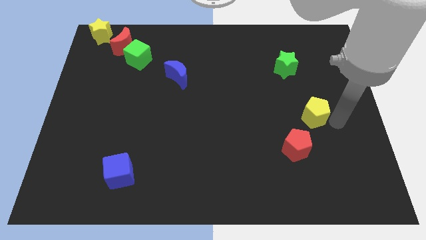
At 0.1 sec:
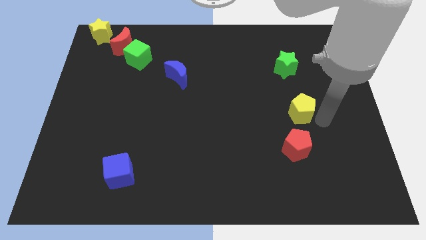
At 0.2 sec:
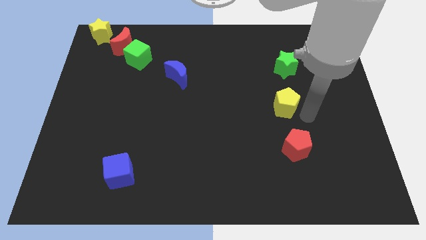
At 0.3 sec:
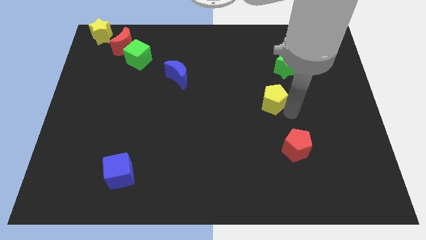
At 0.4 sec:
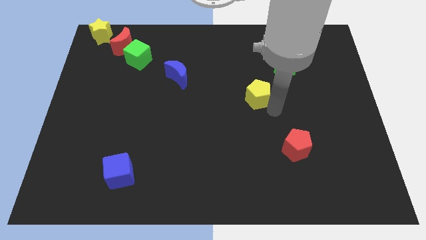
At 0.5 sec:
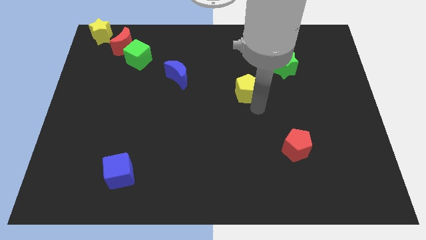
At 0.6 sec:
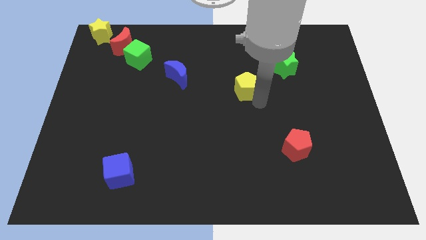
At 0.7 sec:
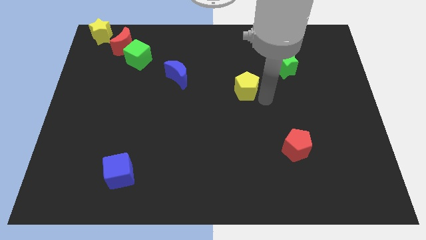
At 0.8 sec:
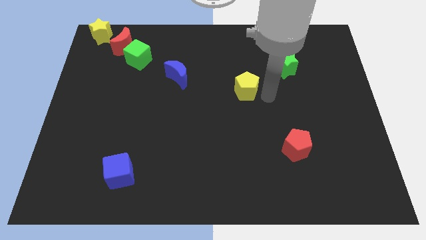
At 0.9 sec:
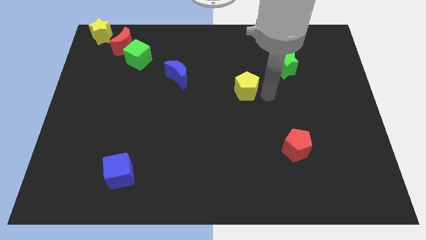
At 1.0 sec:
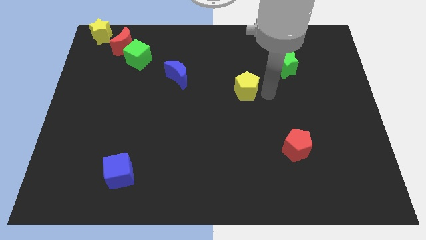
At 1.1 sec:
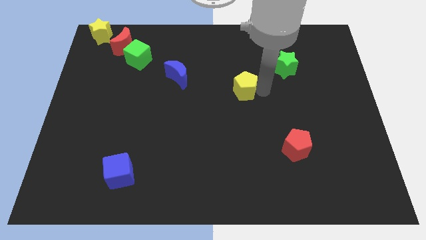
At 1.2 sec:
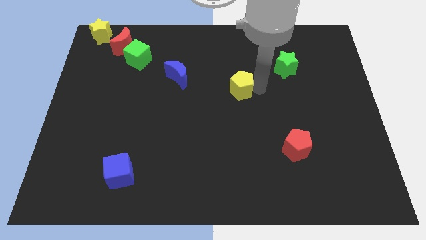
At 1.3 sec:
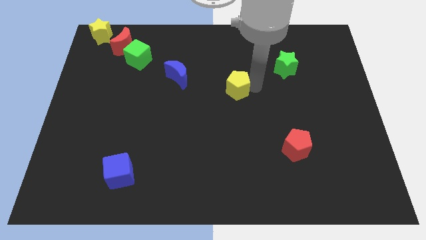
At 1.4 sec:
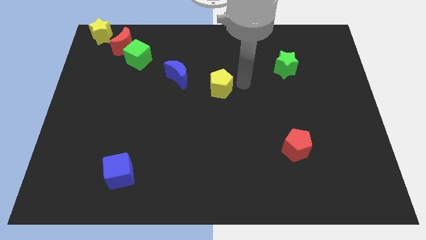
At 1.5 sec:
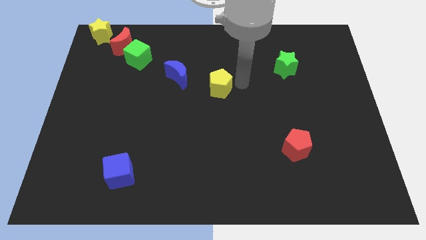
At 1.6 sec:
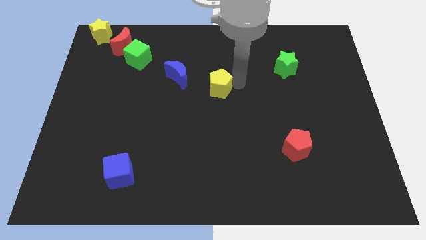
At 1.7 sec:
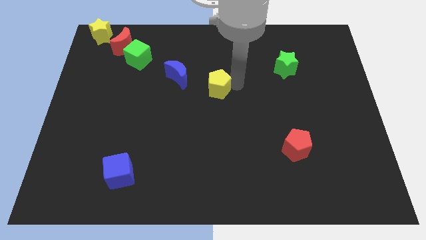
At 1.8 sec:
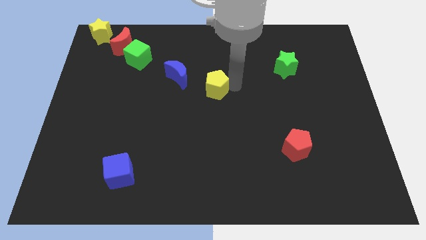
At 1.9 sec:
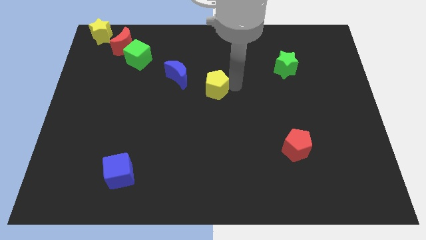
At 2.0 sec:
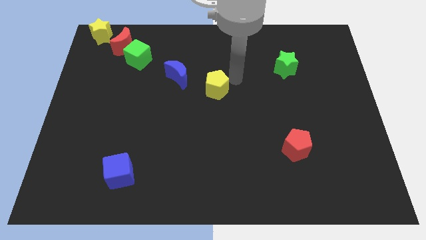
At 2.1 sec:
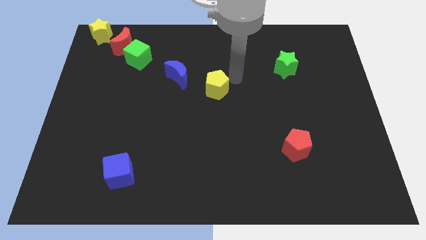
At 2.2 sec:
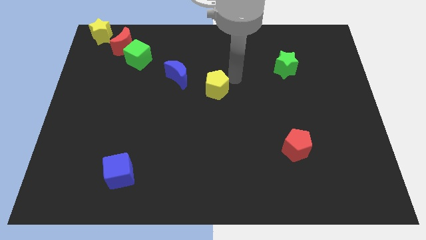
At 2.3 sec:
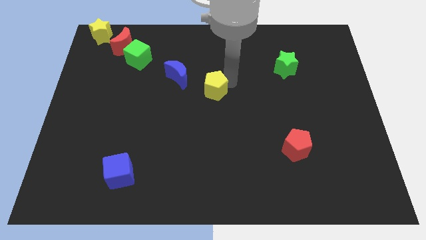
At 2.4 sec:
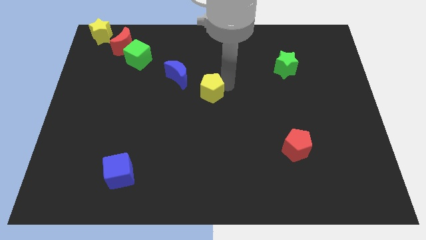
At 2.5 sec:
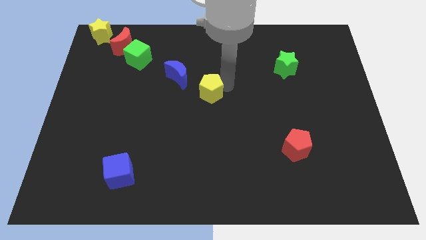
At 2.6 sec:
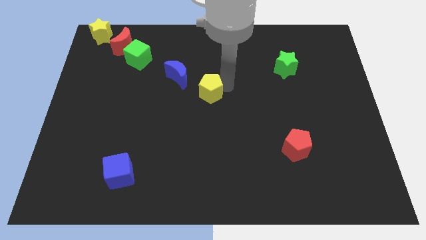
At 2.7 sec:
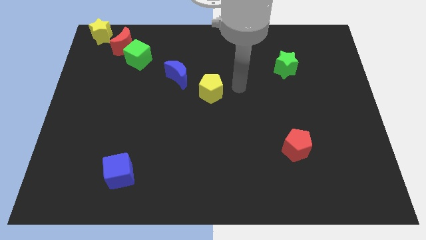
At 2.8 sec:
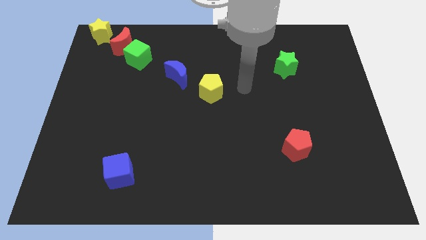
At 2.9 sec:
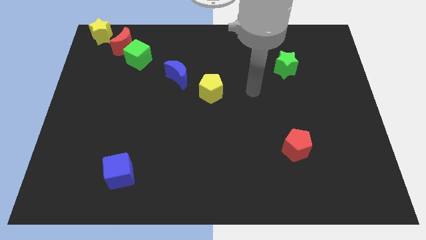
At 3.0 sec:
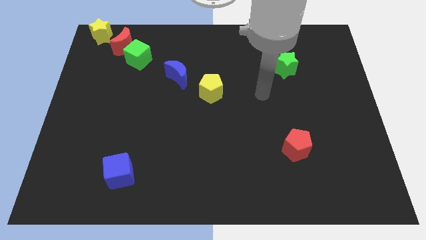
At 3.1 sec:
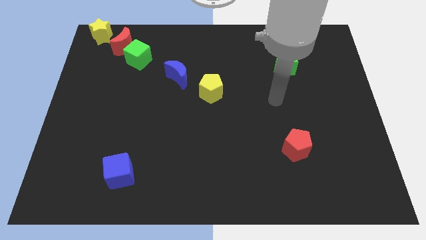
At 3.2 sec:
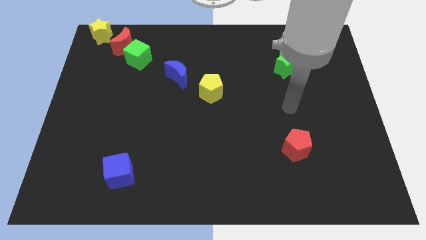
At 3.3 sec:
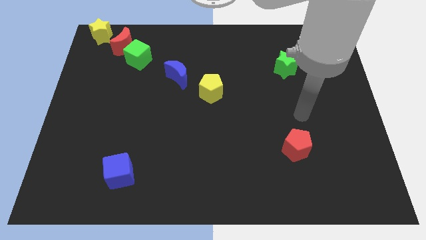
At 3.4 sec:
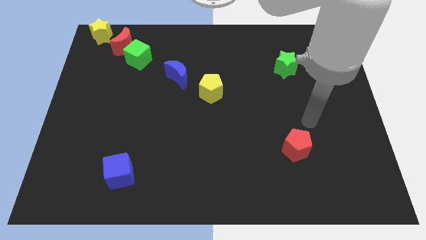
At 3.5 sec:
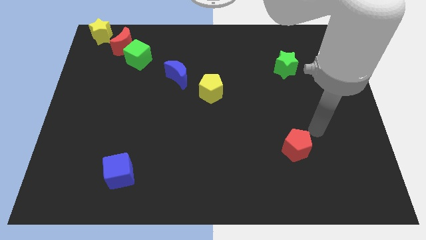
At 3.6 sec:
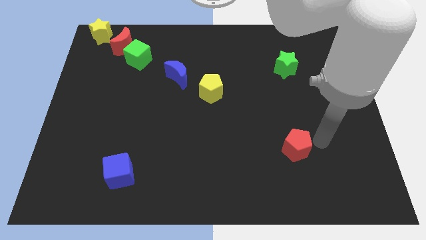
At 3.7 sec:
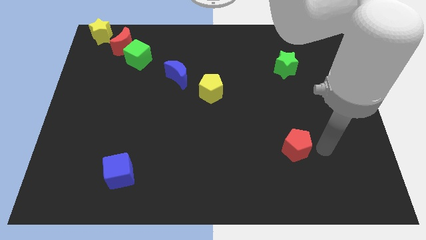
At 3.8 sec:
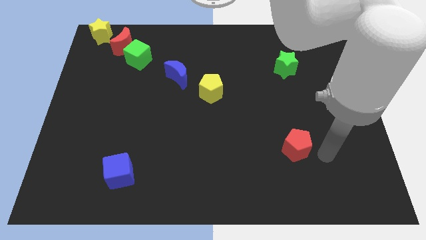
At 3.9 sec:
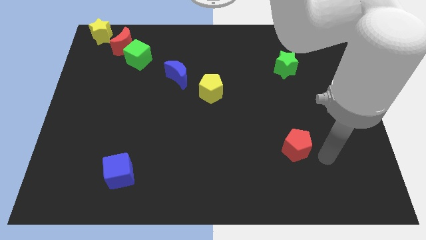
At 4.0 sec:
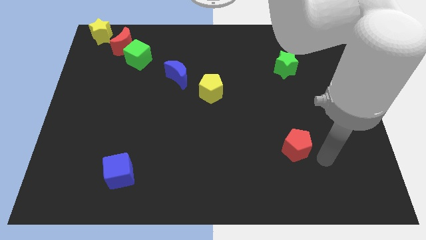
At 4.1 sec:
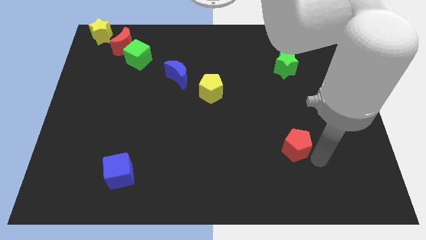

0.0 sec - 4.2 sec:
push the yellow pentagon to the center of the board

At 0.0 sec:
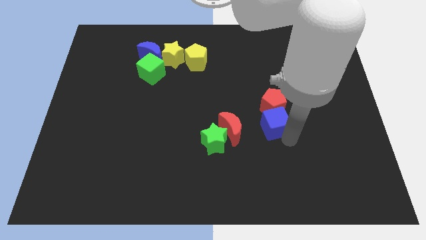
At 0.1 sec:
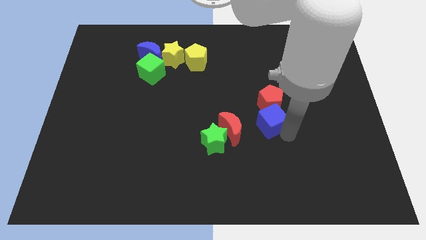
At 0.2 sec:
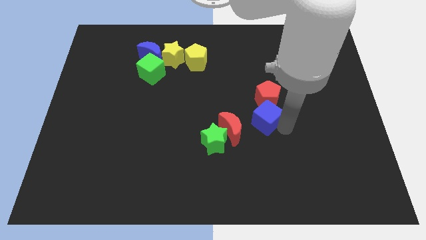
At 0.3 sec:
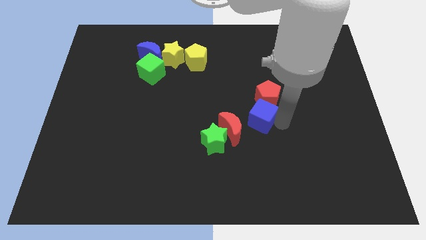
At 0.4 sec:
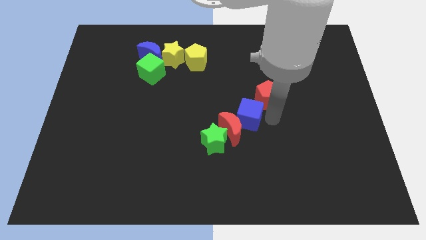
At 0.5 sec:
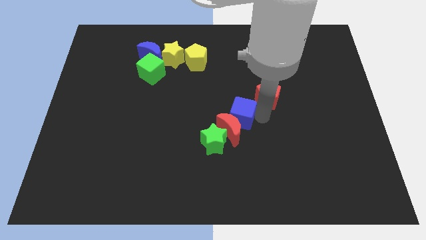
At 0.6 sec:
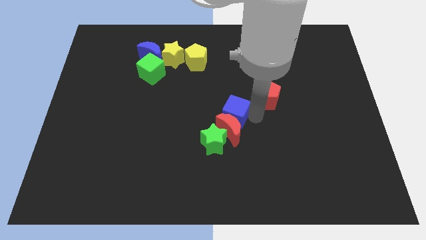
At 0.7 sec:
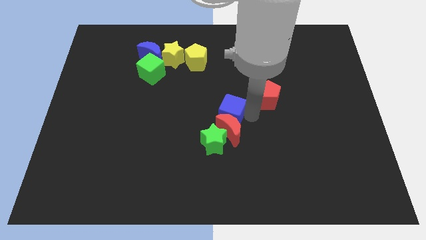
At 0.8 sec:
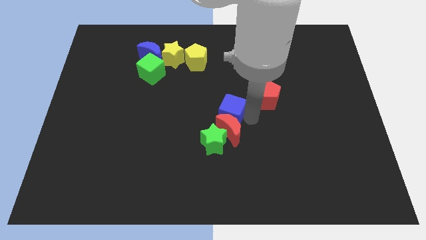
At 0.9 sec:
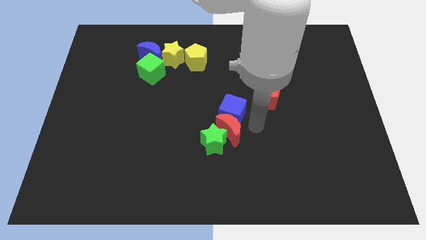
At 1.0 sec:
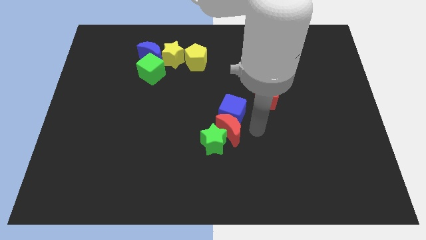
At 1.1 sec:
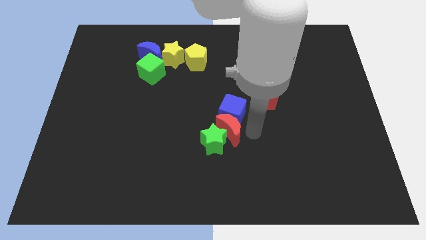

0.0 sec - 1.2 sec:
push the blue cube to the right of the red crescent

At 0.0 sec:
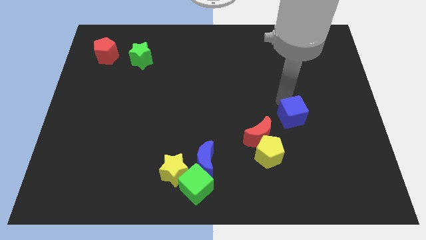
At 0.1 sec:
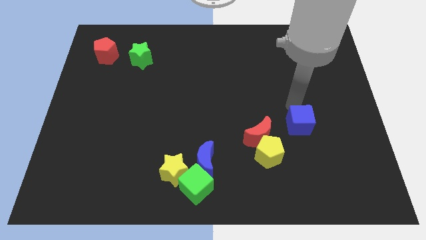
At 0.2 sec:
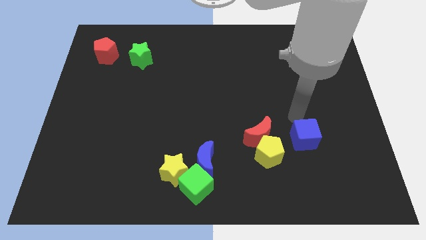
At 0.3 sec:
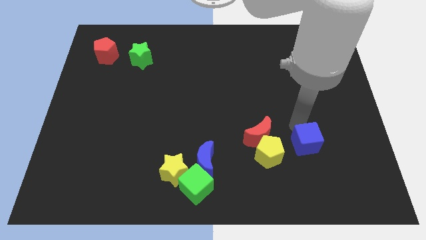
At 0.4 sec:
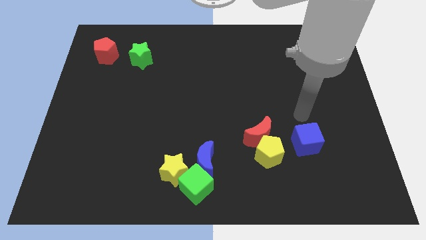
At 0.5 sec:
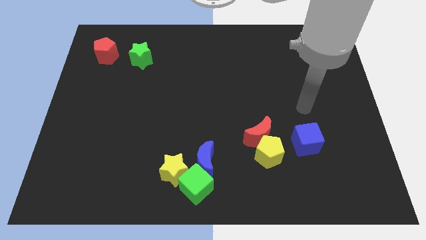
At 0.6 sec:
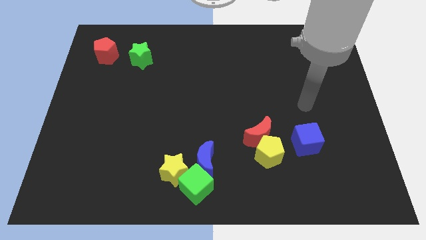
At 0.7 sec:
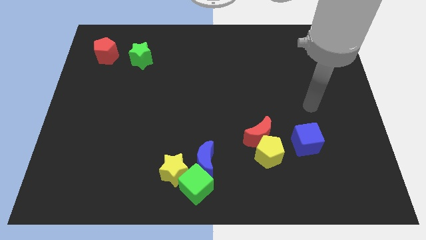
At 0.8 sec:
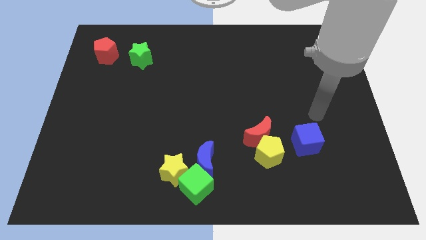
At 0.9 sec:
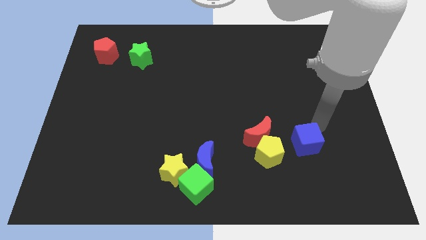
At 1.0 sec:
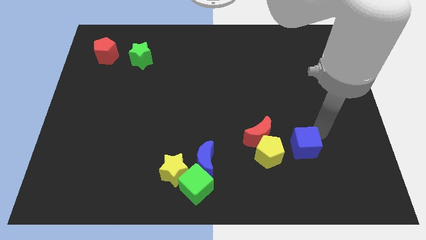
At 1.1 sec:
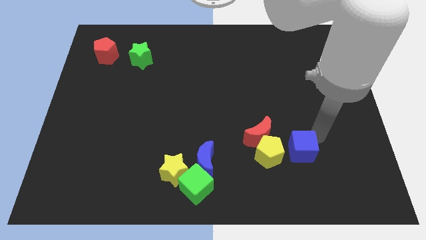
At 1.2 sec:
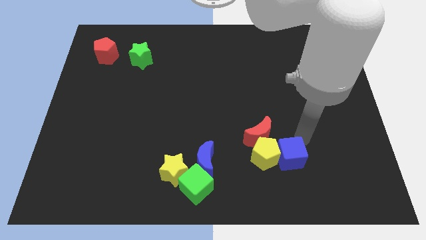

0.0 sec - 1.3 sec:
move blue cube into yellow pentagon

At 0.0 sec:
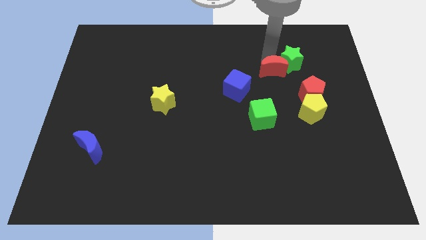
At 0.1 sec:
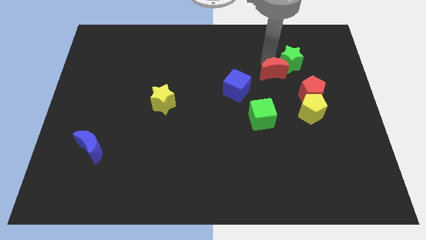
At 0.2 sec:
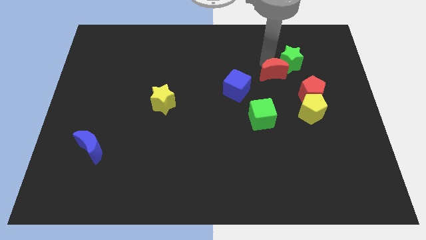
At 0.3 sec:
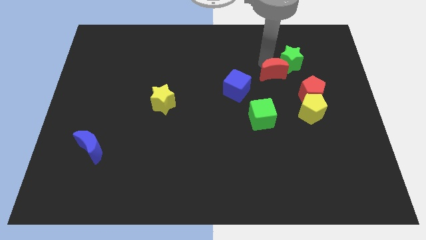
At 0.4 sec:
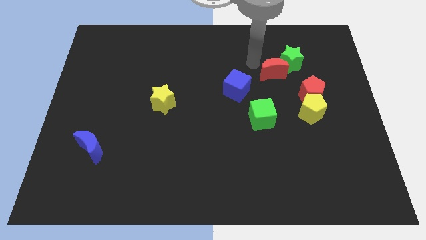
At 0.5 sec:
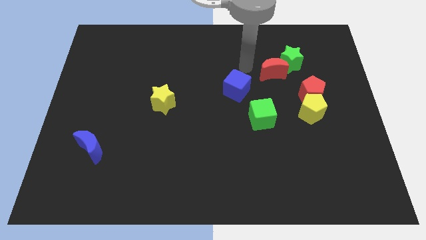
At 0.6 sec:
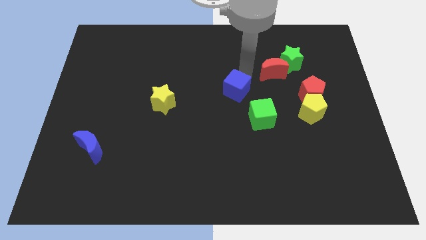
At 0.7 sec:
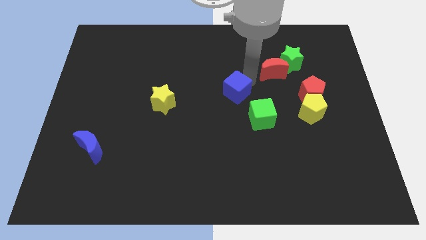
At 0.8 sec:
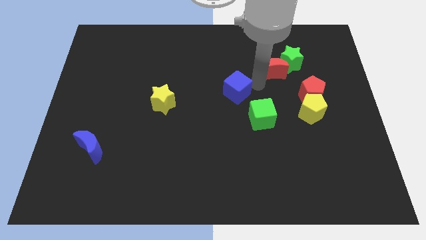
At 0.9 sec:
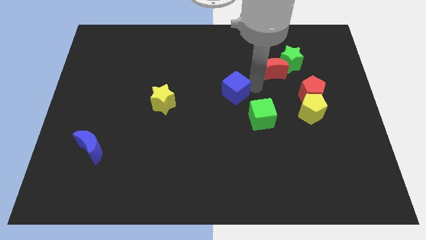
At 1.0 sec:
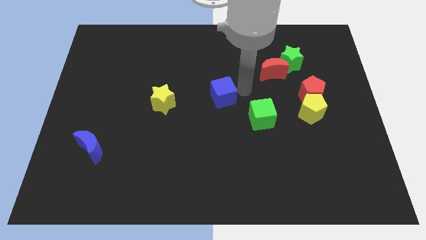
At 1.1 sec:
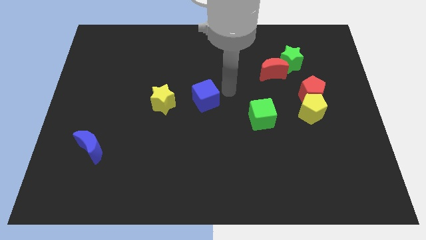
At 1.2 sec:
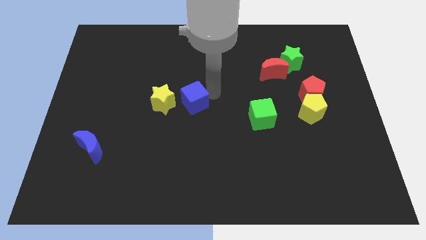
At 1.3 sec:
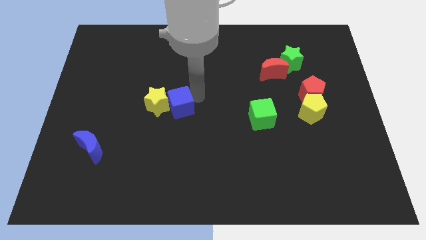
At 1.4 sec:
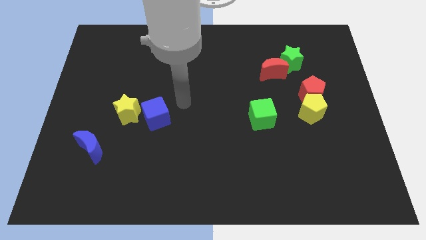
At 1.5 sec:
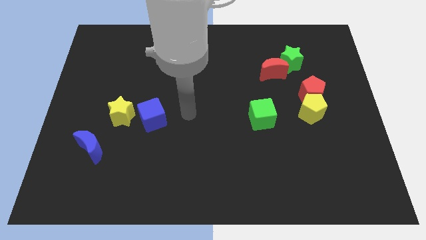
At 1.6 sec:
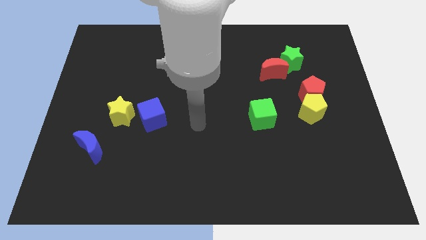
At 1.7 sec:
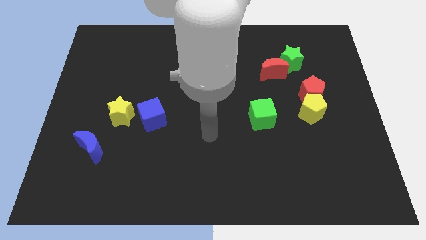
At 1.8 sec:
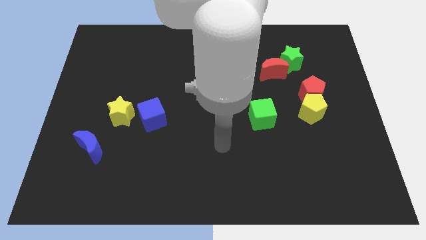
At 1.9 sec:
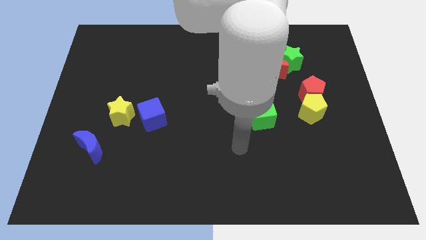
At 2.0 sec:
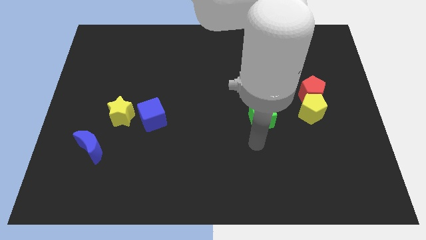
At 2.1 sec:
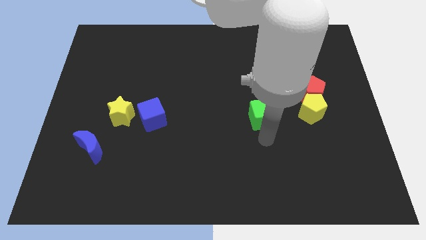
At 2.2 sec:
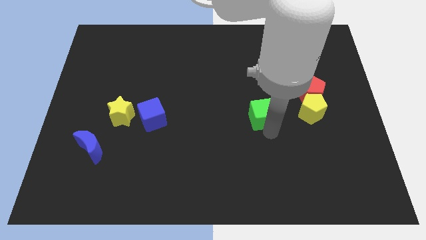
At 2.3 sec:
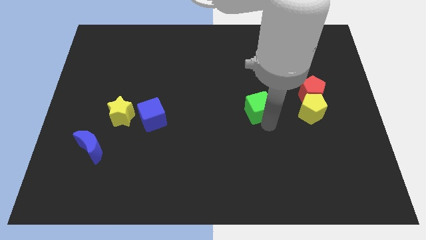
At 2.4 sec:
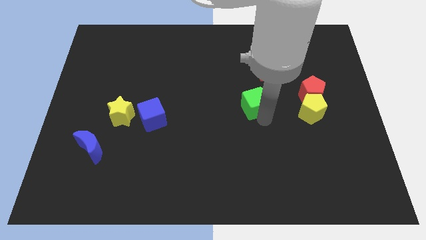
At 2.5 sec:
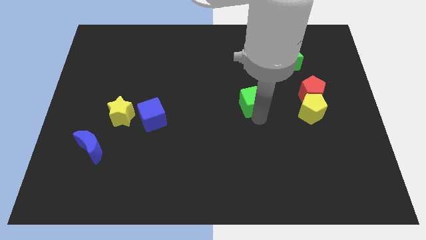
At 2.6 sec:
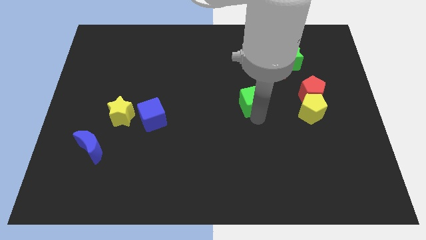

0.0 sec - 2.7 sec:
slide the blue cube towards the yellow star
